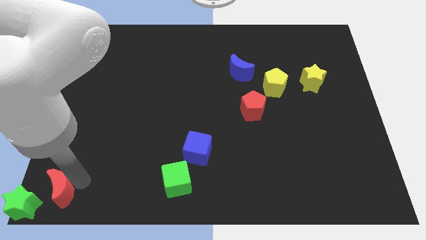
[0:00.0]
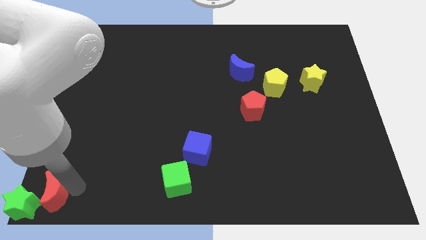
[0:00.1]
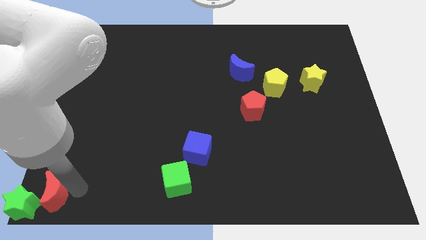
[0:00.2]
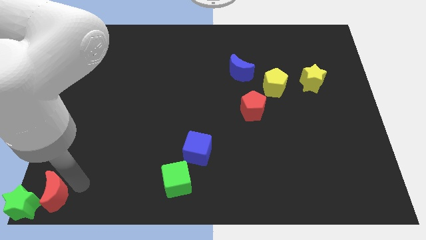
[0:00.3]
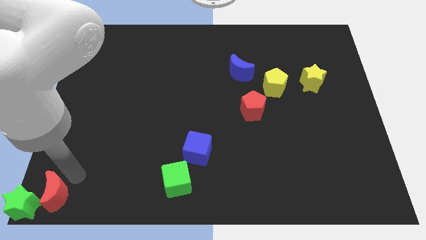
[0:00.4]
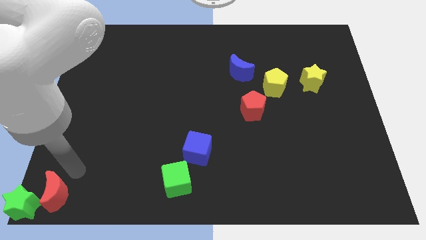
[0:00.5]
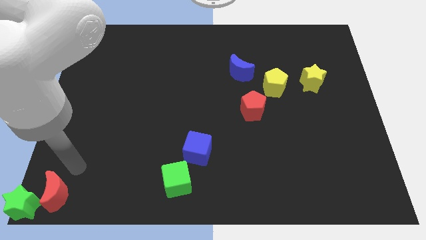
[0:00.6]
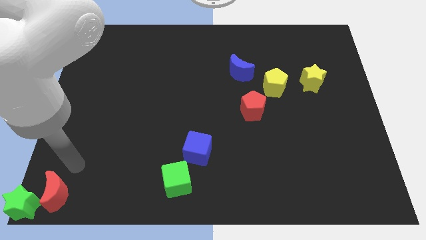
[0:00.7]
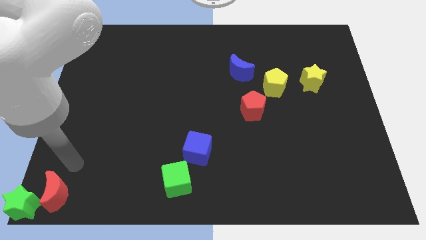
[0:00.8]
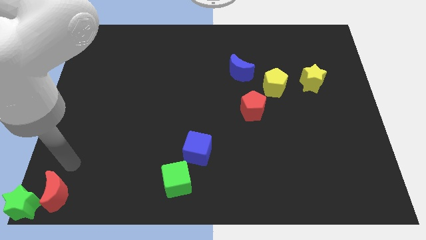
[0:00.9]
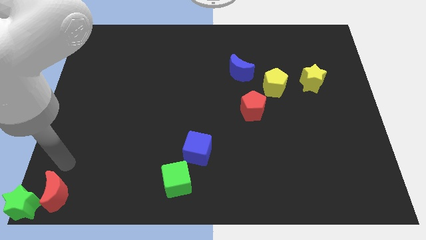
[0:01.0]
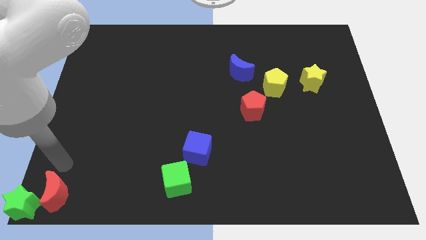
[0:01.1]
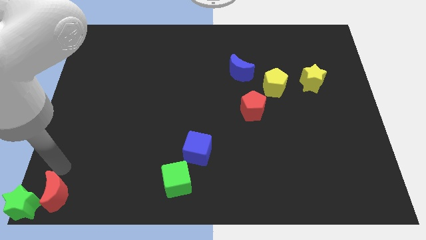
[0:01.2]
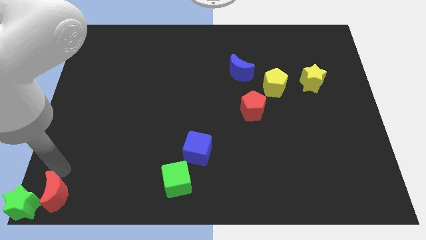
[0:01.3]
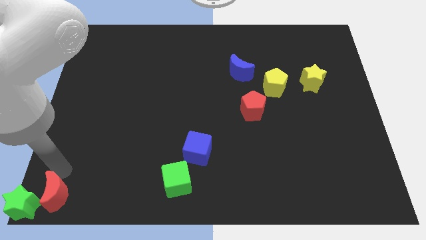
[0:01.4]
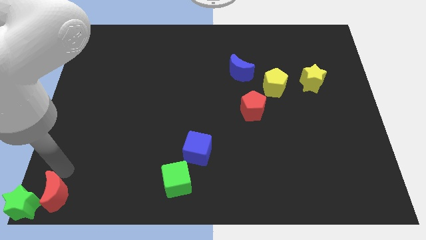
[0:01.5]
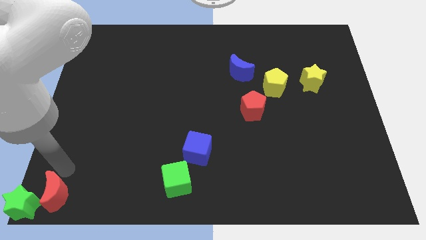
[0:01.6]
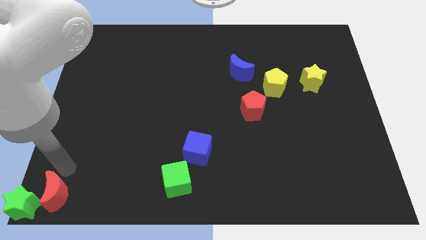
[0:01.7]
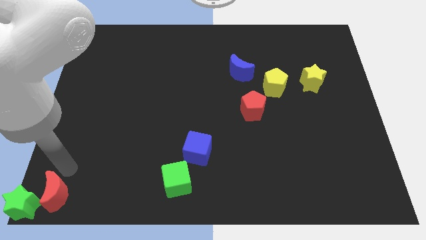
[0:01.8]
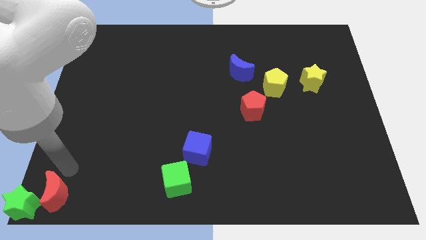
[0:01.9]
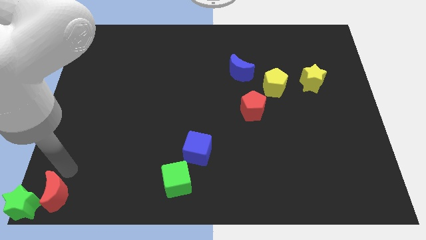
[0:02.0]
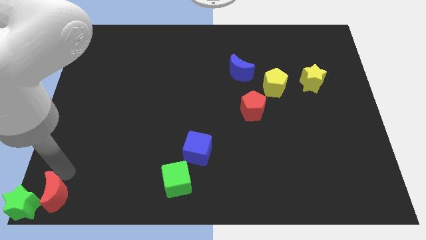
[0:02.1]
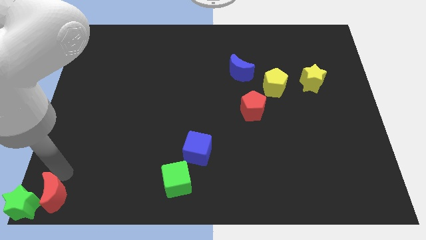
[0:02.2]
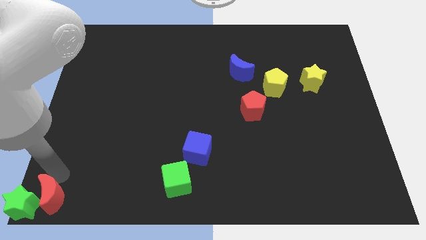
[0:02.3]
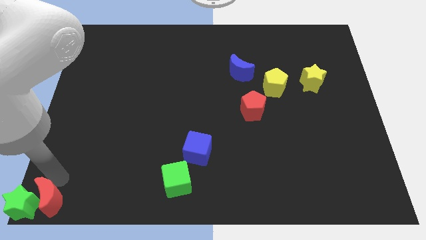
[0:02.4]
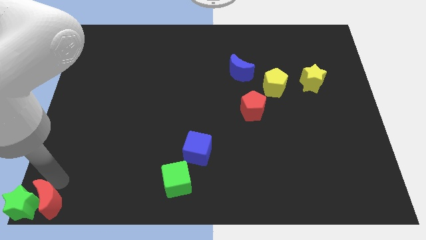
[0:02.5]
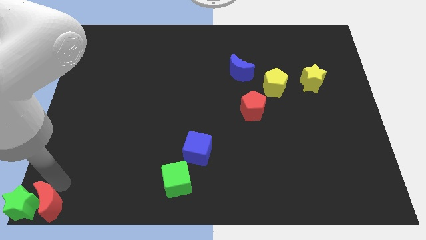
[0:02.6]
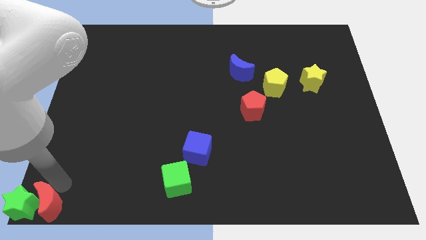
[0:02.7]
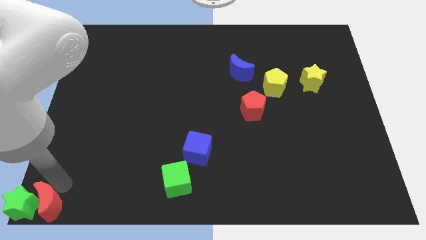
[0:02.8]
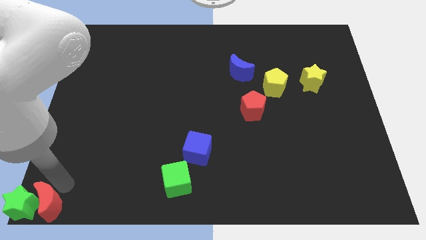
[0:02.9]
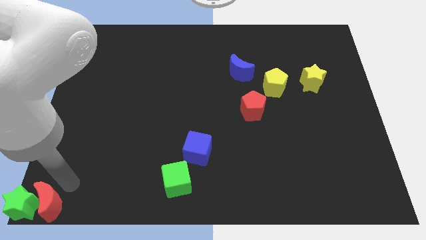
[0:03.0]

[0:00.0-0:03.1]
push the red moon into the green star

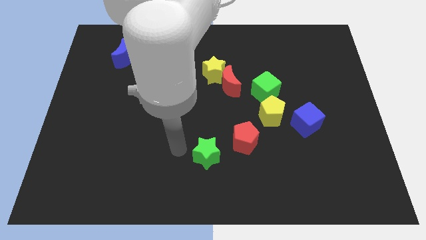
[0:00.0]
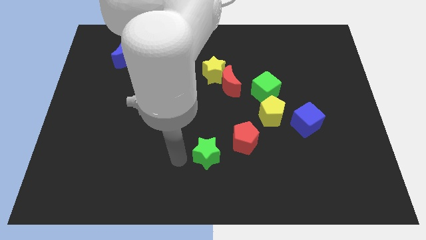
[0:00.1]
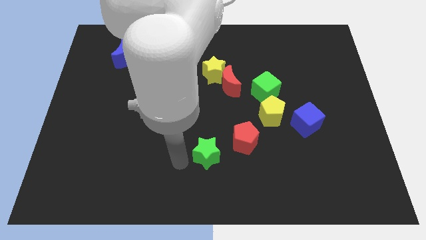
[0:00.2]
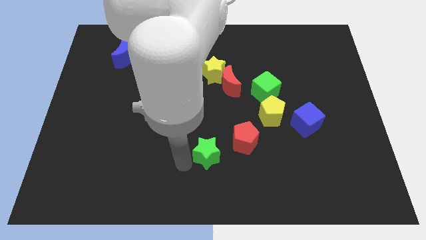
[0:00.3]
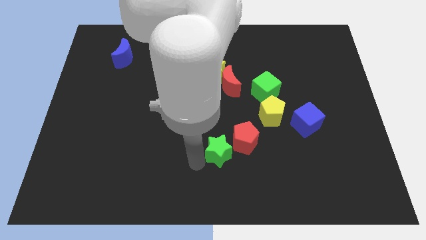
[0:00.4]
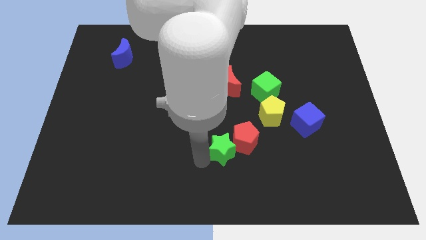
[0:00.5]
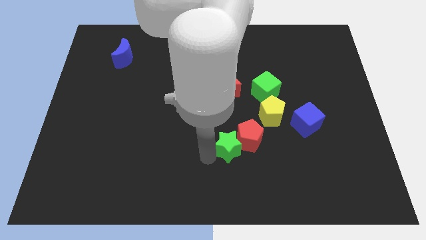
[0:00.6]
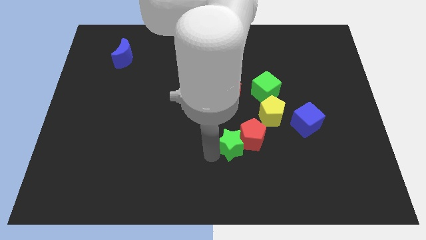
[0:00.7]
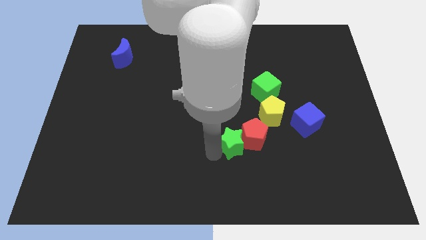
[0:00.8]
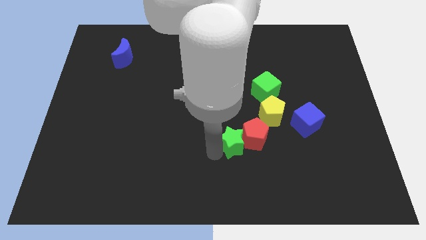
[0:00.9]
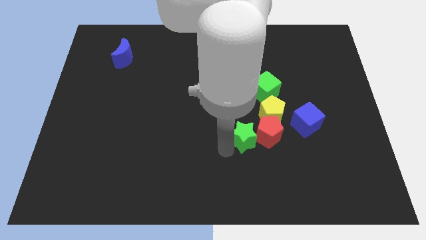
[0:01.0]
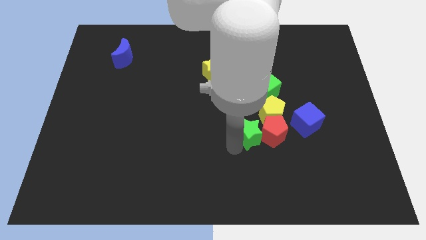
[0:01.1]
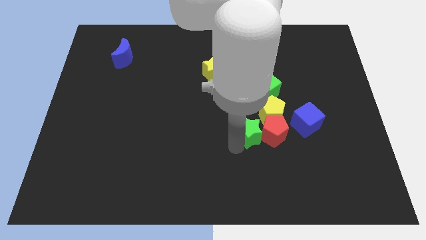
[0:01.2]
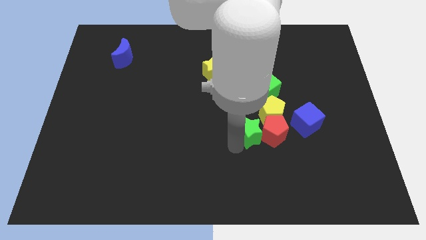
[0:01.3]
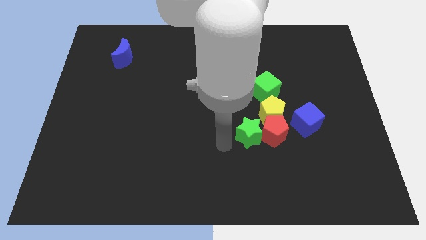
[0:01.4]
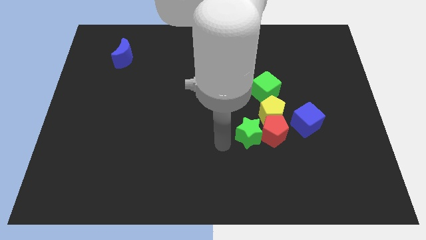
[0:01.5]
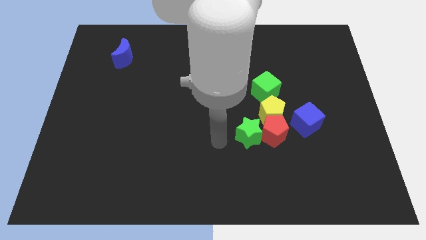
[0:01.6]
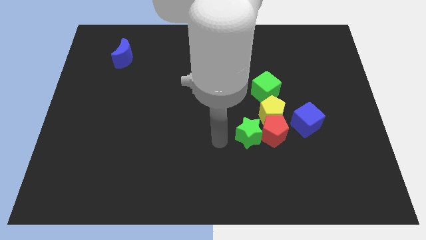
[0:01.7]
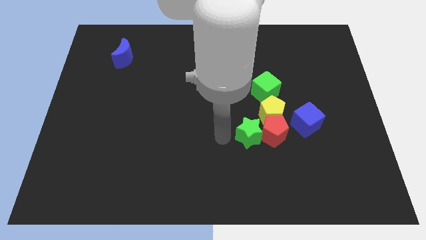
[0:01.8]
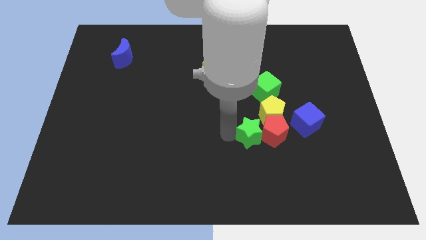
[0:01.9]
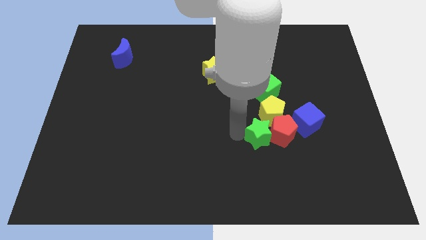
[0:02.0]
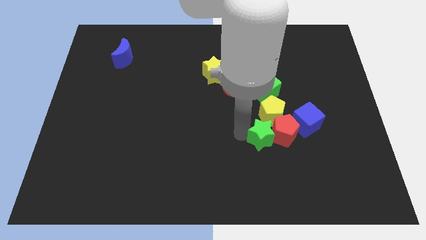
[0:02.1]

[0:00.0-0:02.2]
move the green star to the vertical line

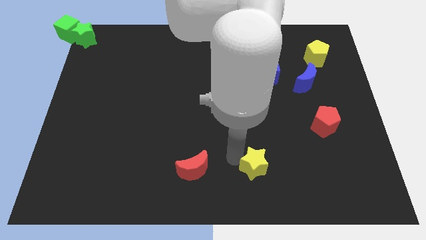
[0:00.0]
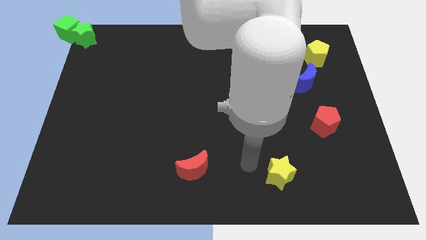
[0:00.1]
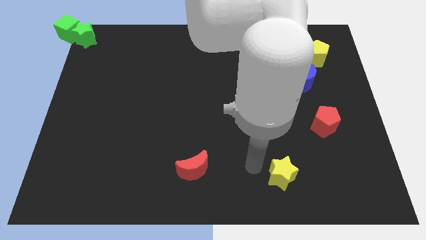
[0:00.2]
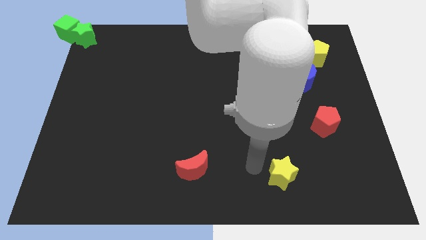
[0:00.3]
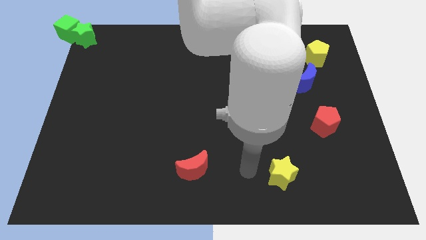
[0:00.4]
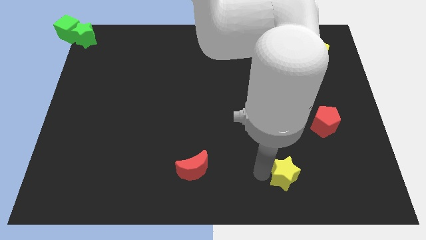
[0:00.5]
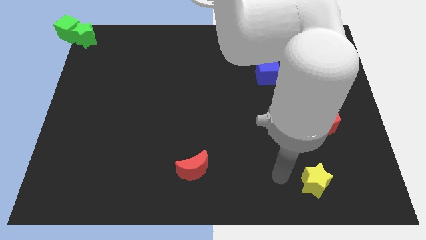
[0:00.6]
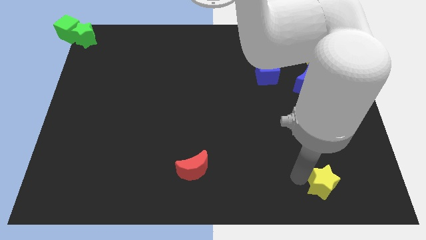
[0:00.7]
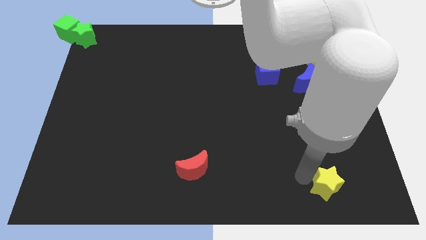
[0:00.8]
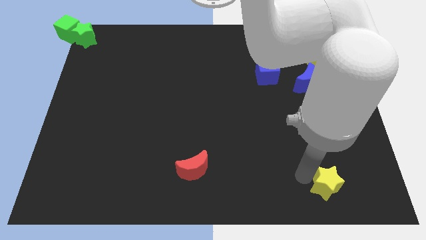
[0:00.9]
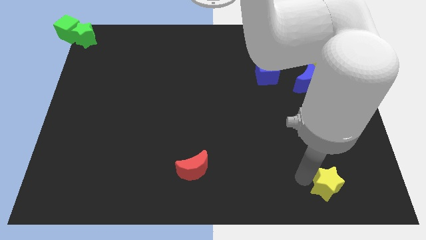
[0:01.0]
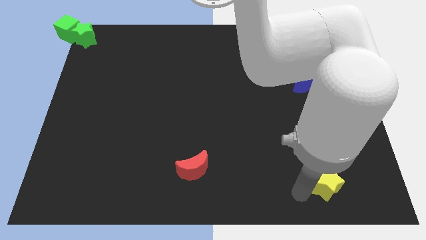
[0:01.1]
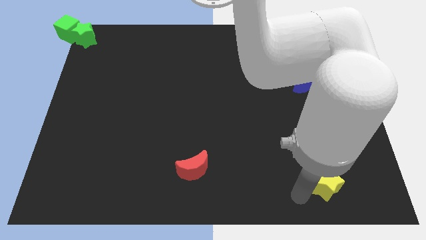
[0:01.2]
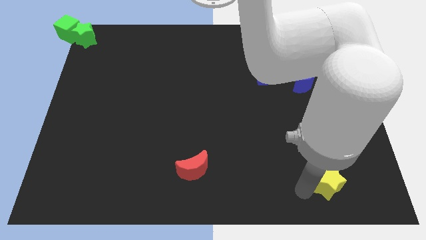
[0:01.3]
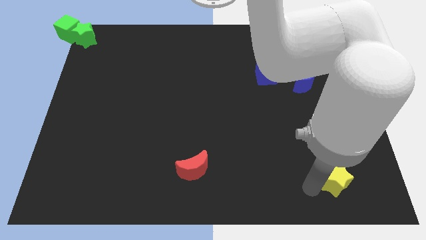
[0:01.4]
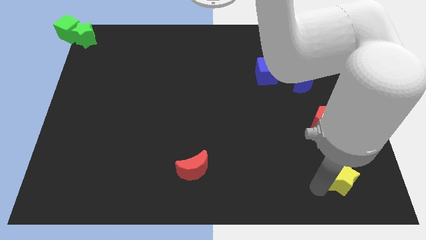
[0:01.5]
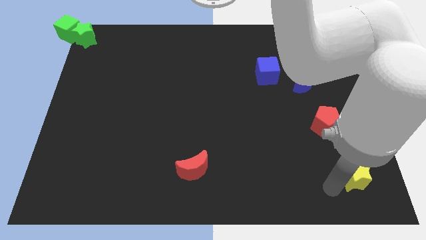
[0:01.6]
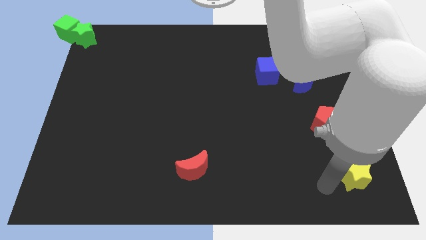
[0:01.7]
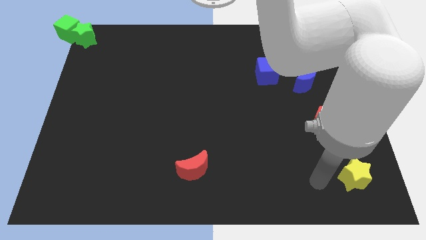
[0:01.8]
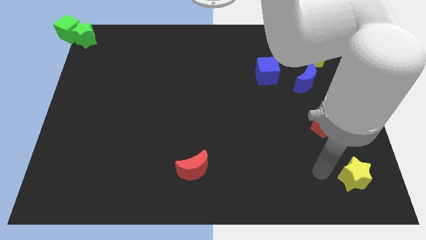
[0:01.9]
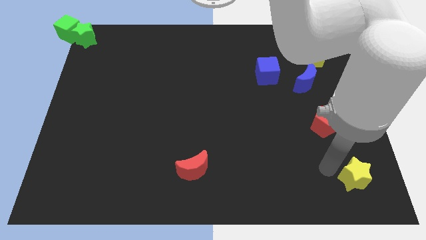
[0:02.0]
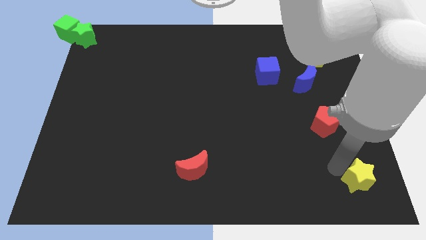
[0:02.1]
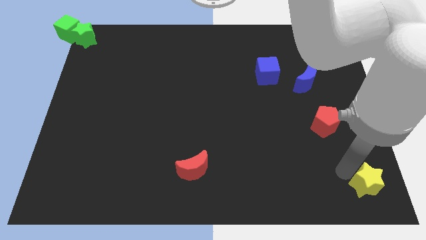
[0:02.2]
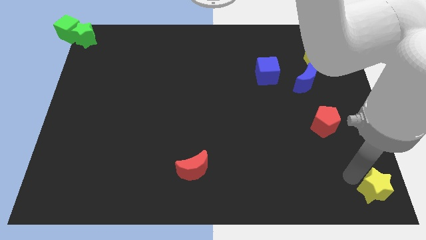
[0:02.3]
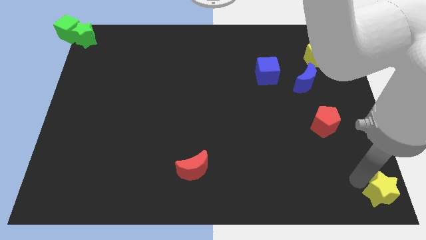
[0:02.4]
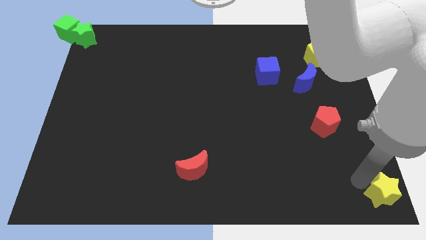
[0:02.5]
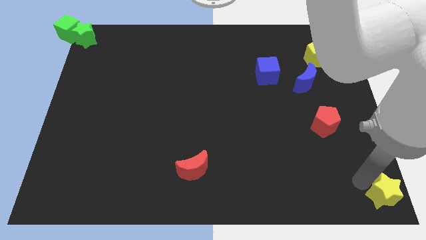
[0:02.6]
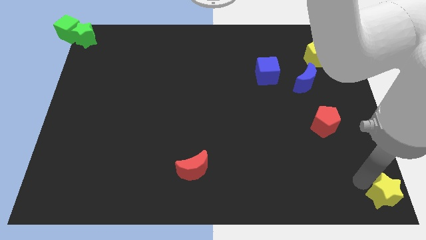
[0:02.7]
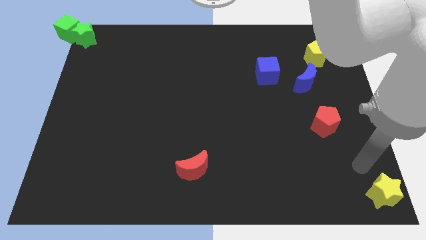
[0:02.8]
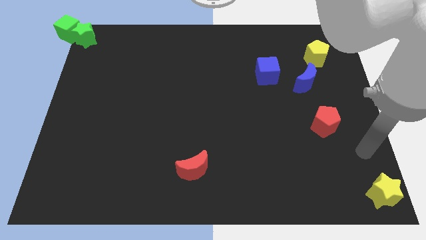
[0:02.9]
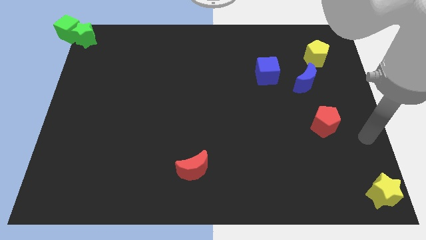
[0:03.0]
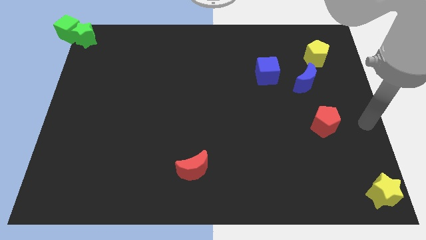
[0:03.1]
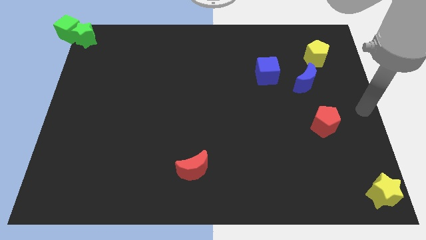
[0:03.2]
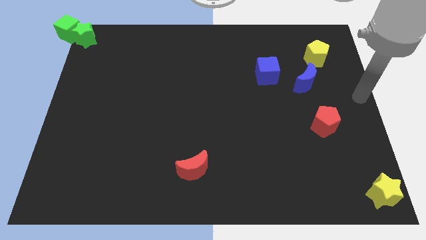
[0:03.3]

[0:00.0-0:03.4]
slide the yellow star towards the bottom right corner of the board

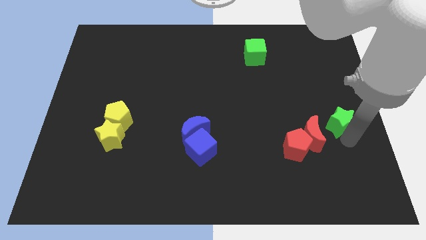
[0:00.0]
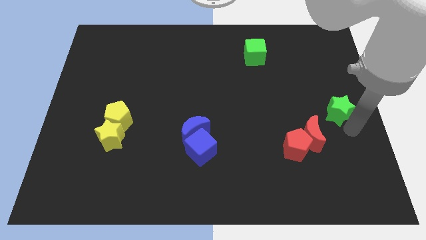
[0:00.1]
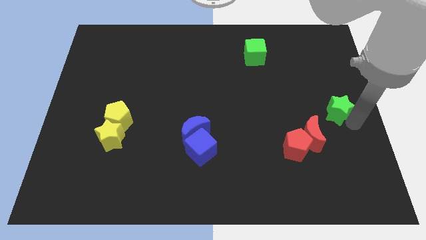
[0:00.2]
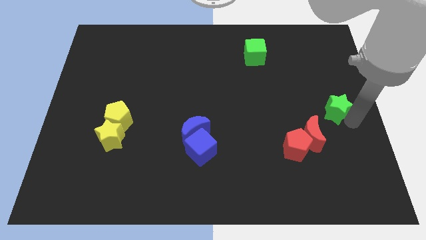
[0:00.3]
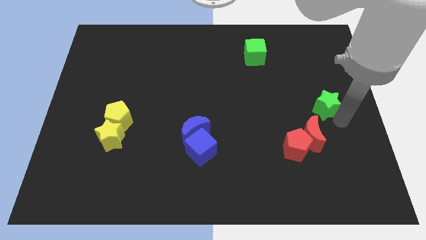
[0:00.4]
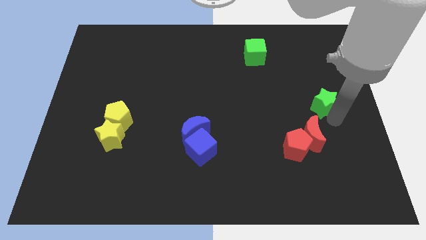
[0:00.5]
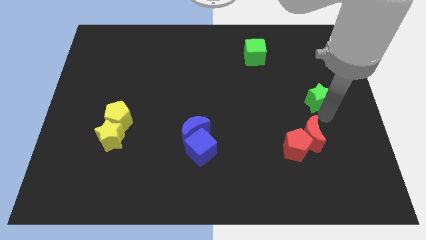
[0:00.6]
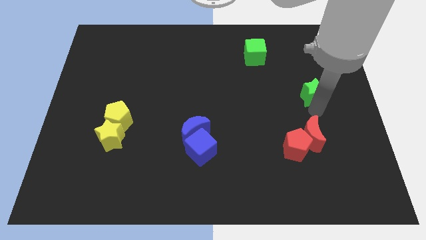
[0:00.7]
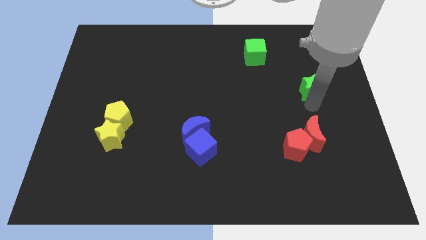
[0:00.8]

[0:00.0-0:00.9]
move the green star above to the red moon
